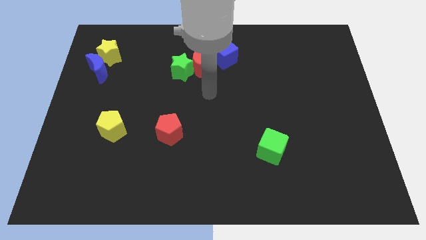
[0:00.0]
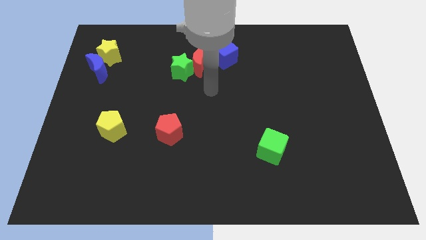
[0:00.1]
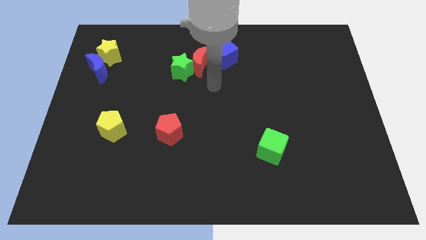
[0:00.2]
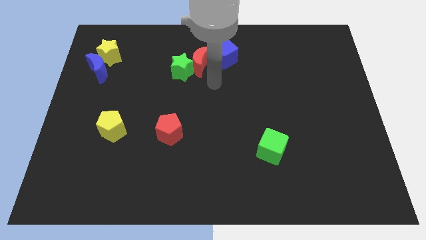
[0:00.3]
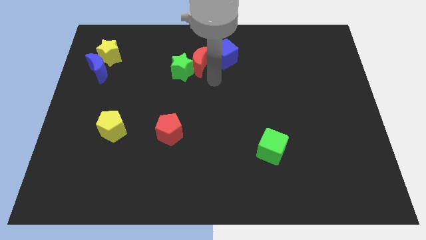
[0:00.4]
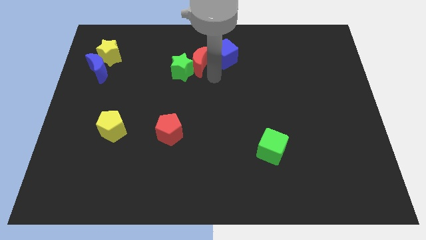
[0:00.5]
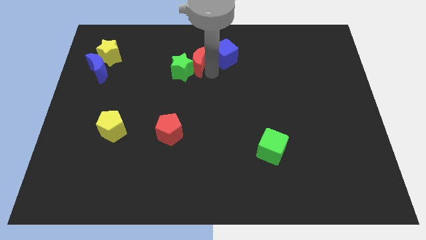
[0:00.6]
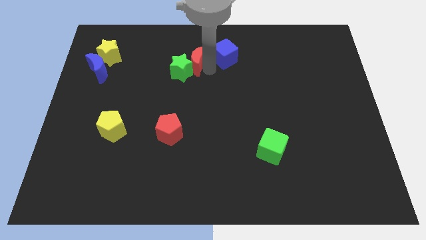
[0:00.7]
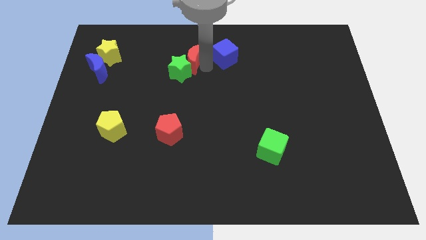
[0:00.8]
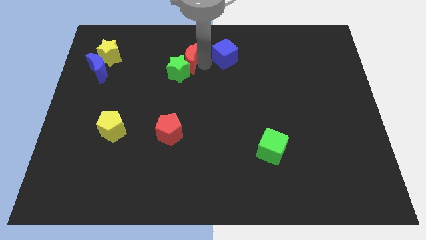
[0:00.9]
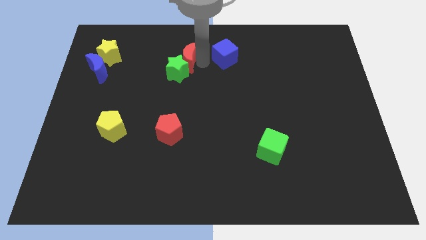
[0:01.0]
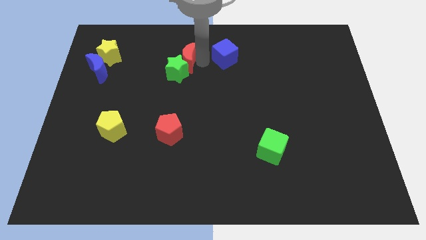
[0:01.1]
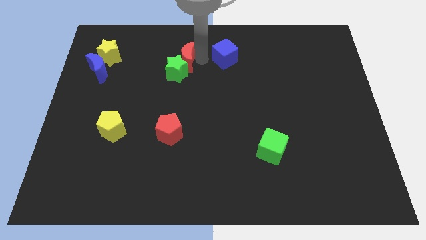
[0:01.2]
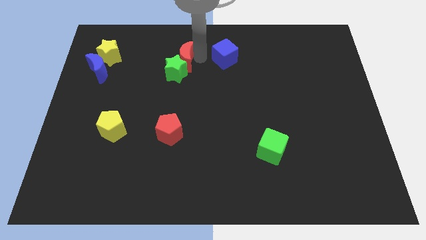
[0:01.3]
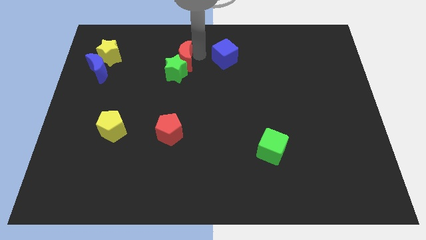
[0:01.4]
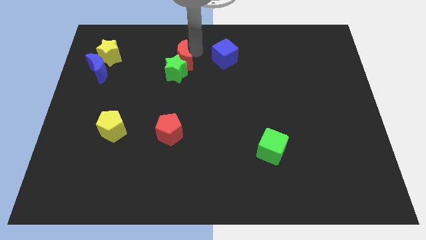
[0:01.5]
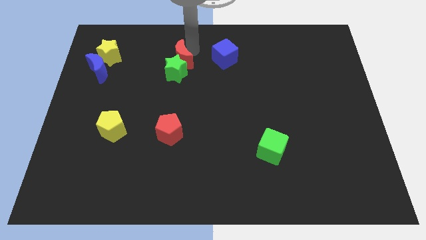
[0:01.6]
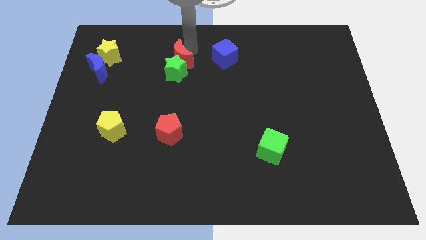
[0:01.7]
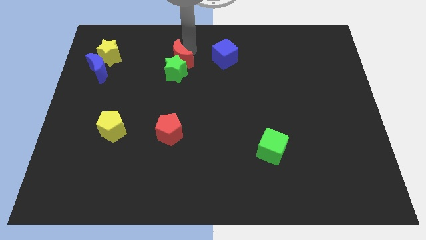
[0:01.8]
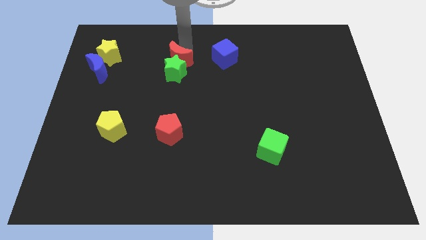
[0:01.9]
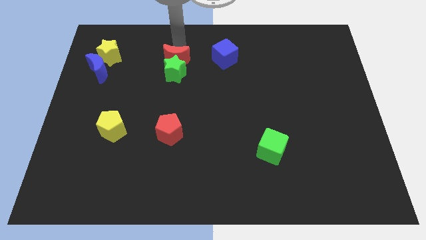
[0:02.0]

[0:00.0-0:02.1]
place the red moon above the green star

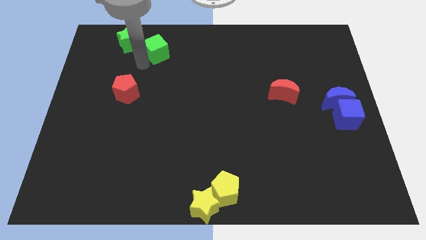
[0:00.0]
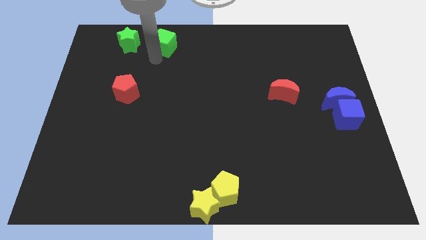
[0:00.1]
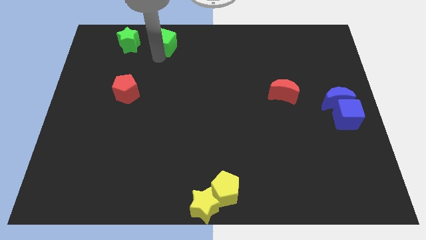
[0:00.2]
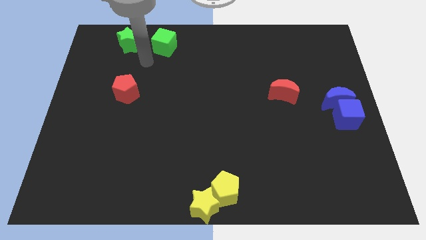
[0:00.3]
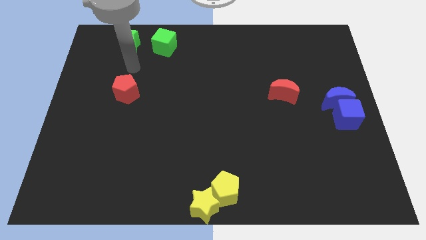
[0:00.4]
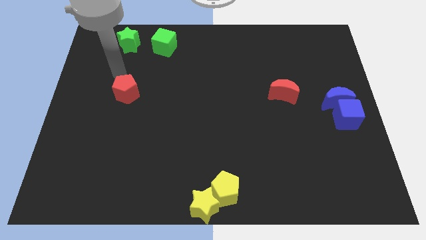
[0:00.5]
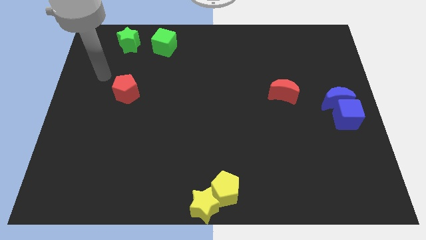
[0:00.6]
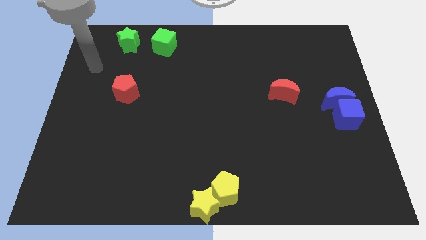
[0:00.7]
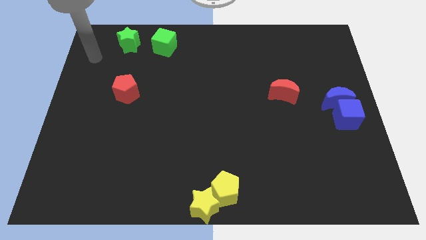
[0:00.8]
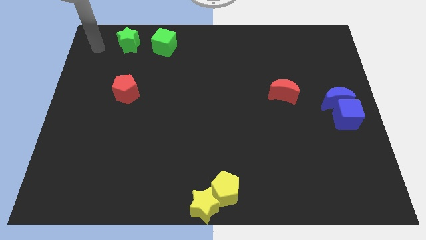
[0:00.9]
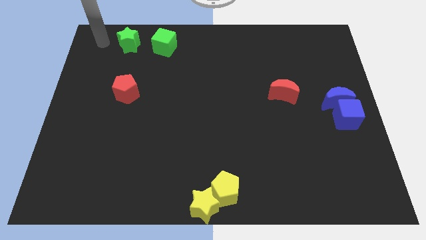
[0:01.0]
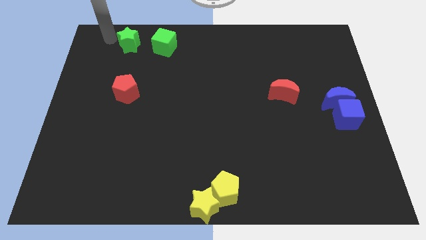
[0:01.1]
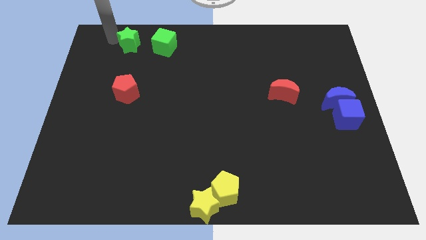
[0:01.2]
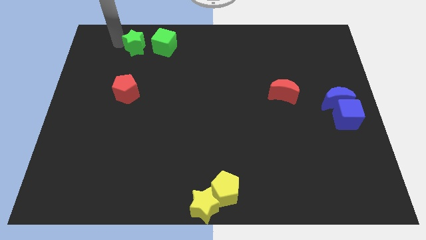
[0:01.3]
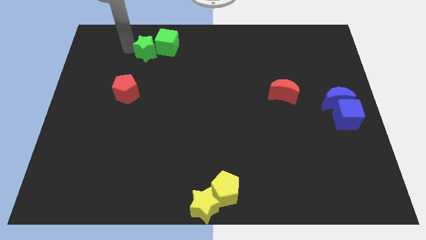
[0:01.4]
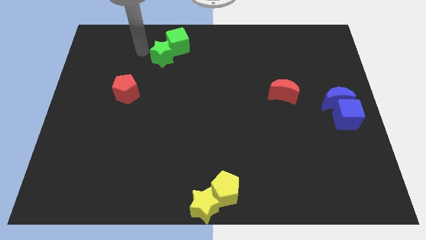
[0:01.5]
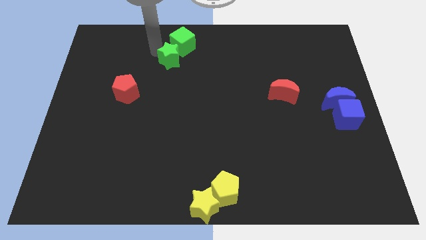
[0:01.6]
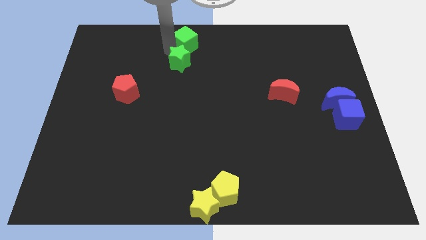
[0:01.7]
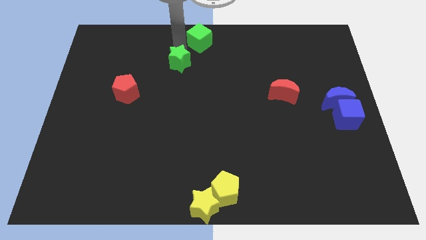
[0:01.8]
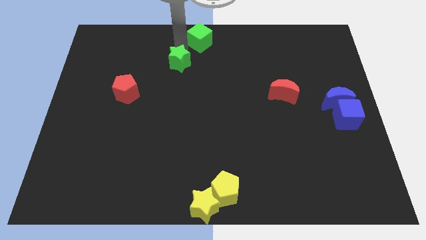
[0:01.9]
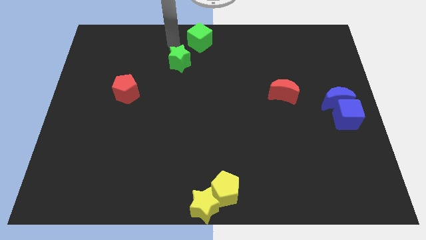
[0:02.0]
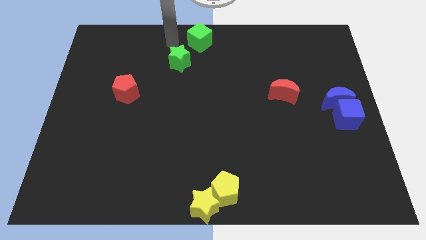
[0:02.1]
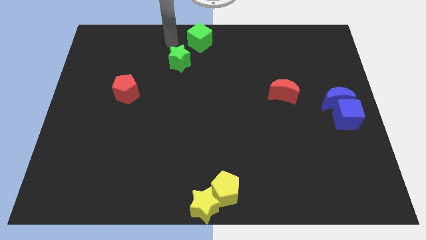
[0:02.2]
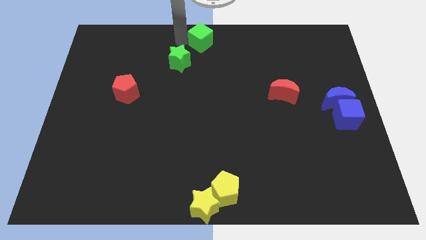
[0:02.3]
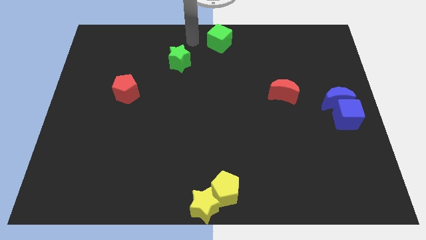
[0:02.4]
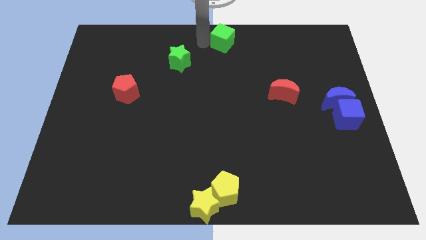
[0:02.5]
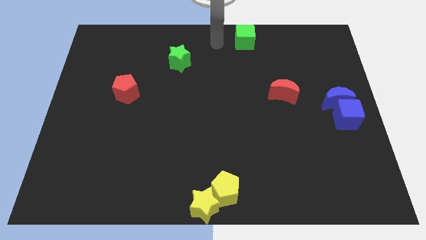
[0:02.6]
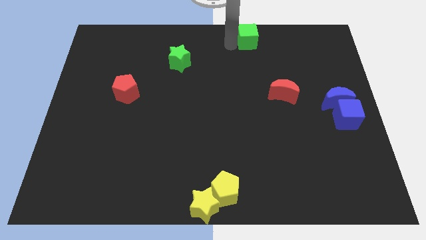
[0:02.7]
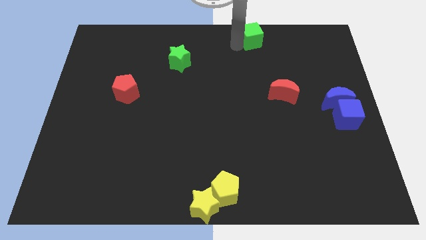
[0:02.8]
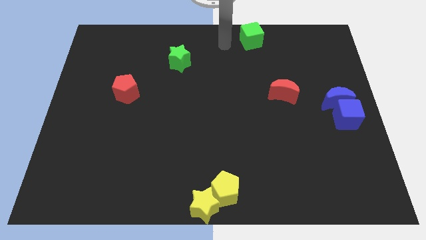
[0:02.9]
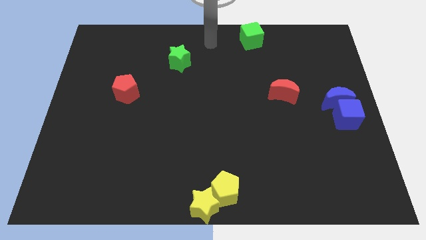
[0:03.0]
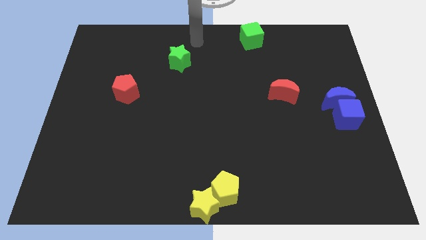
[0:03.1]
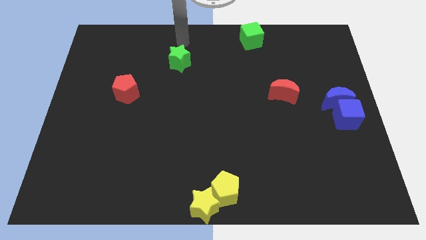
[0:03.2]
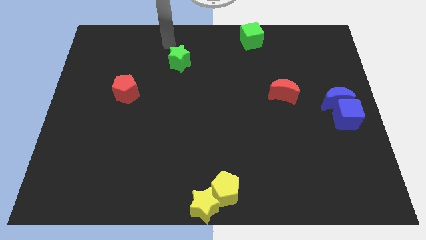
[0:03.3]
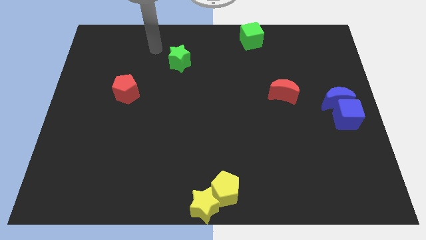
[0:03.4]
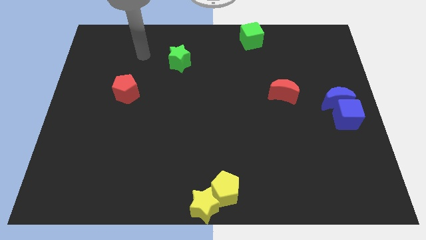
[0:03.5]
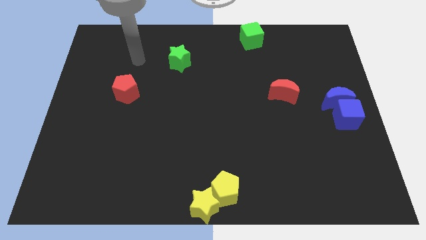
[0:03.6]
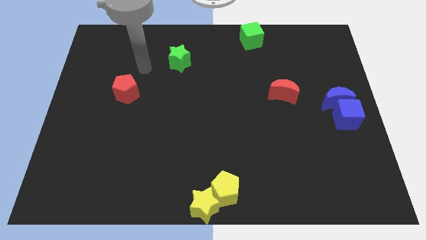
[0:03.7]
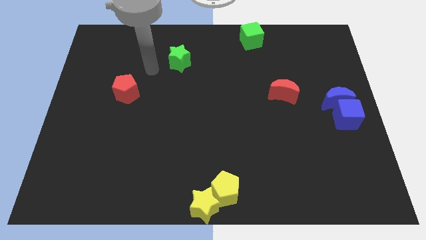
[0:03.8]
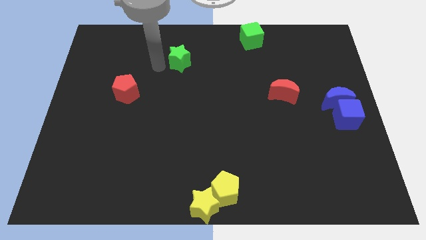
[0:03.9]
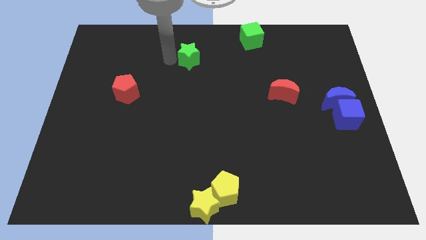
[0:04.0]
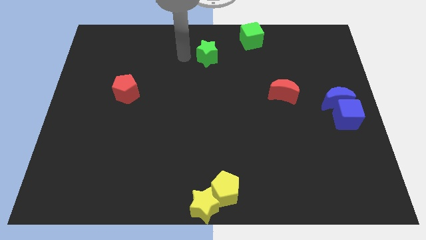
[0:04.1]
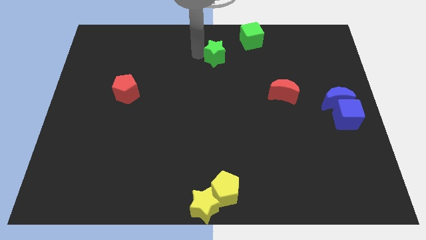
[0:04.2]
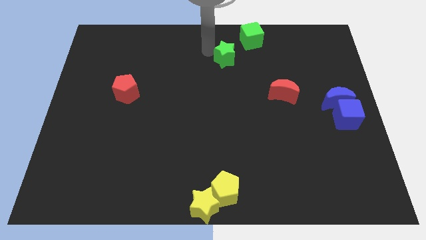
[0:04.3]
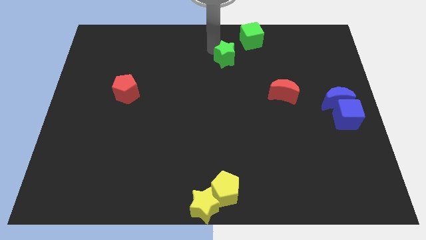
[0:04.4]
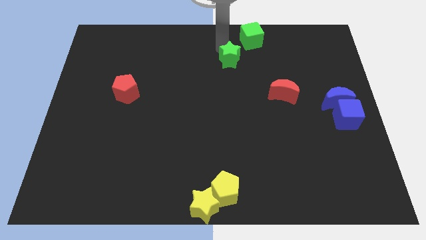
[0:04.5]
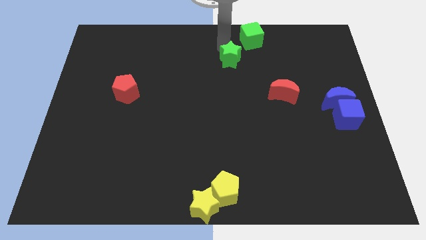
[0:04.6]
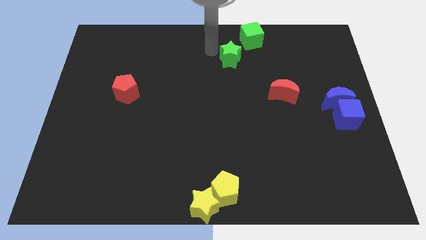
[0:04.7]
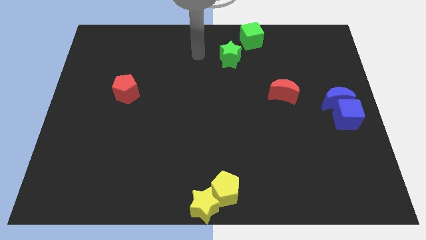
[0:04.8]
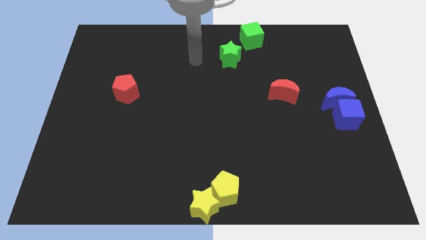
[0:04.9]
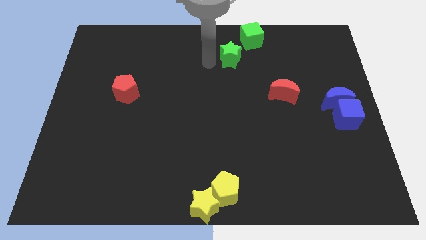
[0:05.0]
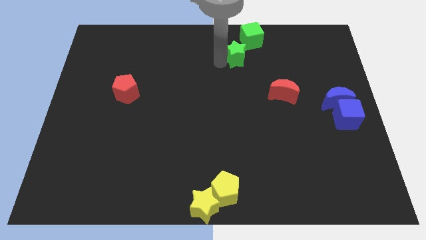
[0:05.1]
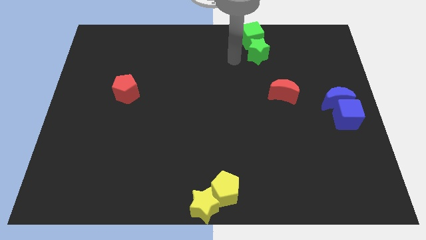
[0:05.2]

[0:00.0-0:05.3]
push the green blocks towards the top center of the board

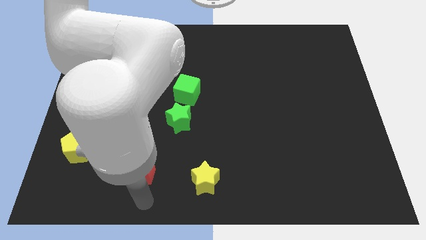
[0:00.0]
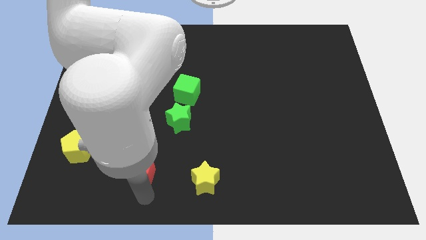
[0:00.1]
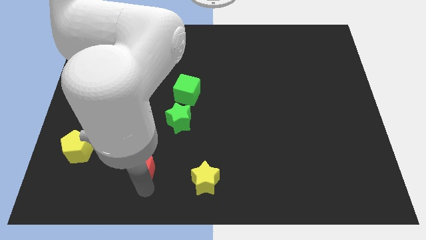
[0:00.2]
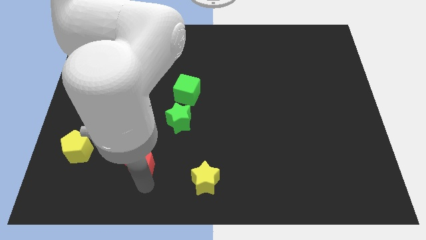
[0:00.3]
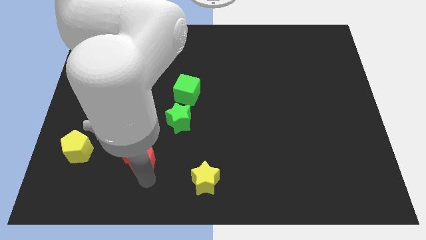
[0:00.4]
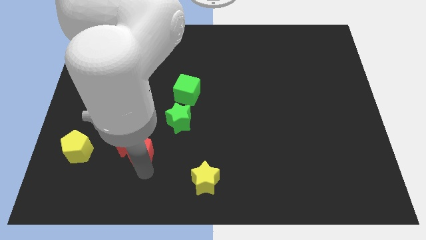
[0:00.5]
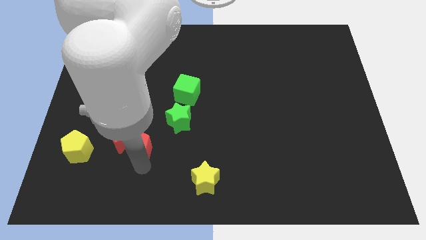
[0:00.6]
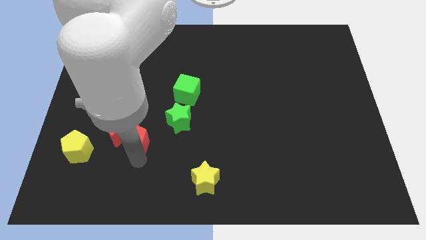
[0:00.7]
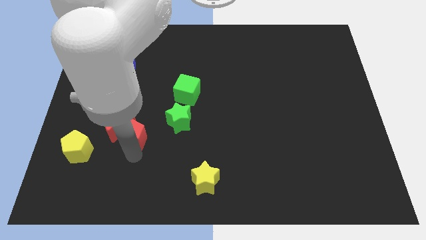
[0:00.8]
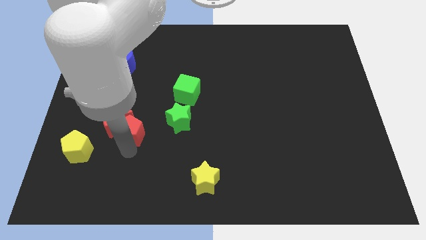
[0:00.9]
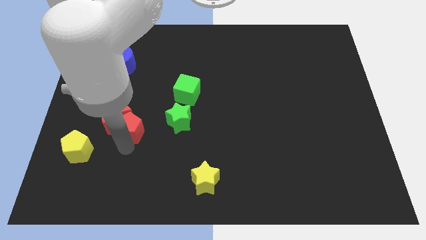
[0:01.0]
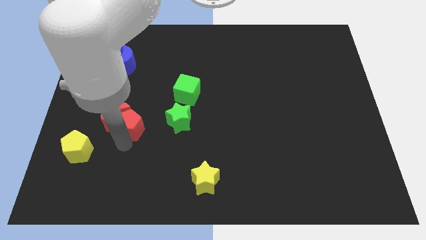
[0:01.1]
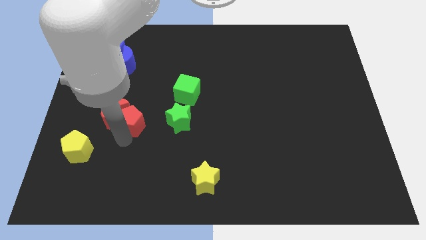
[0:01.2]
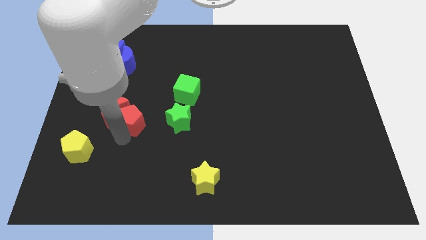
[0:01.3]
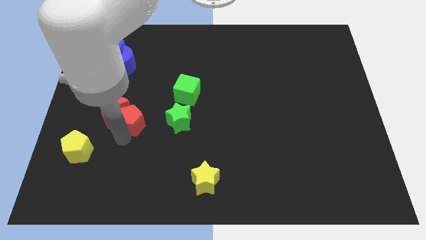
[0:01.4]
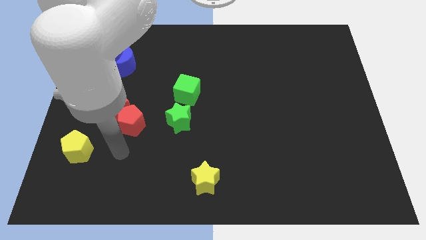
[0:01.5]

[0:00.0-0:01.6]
move the red pentagon and red moon parallel to the green star
